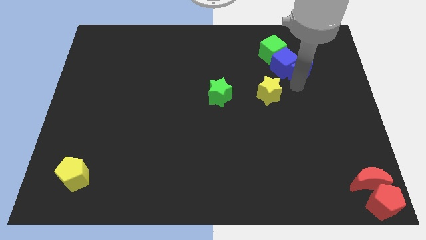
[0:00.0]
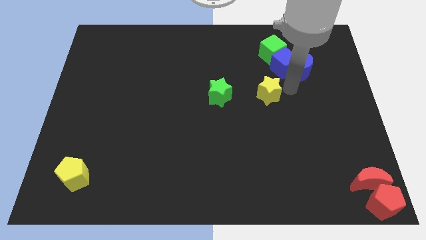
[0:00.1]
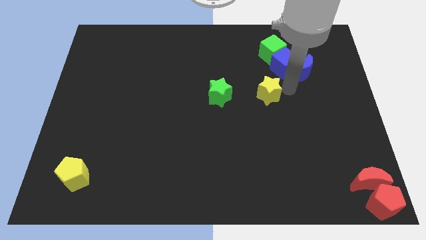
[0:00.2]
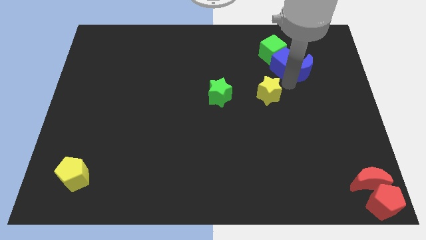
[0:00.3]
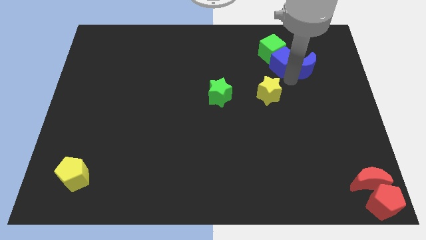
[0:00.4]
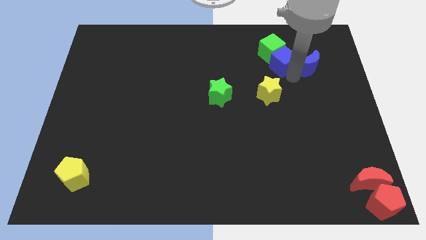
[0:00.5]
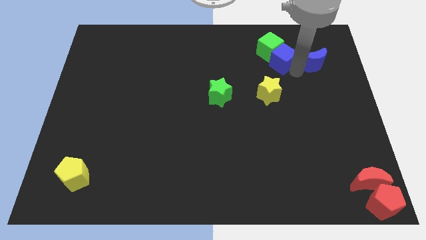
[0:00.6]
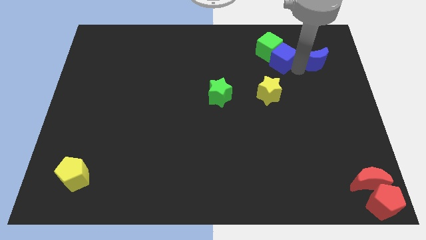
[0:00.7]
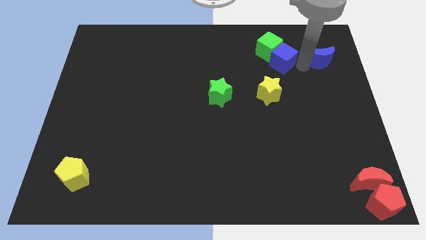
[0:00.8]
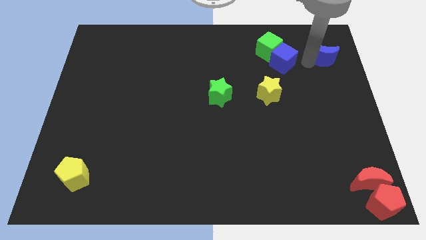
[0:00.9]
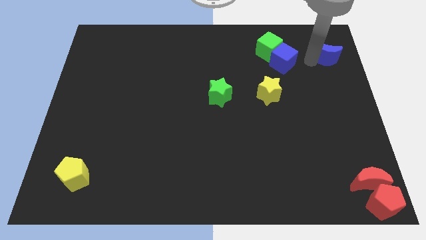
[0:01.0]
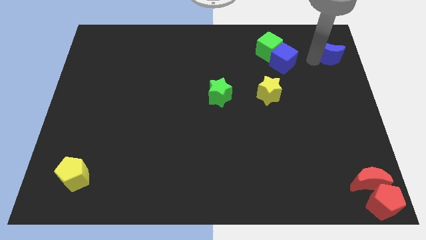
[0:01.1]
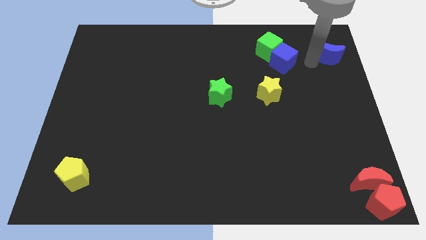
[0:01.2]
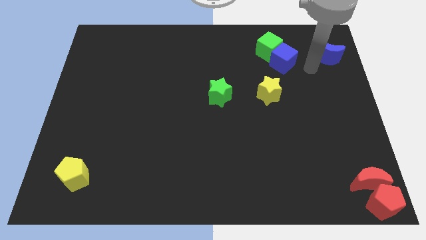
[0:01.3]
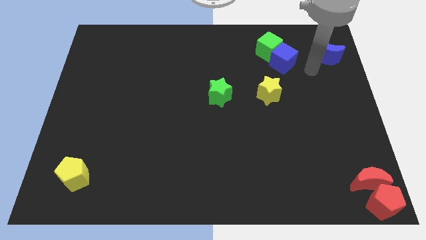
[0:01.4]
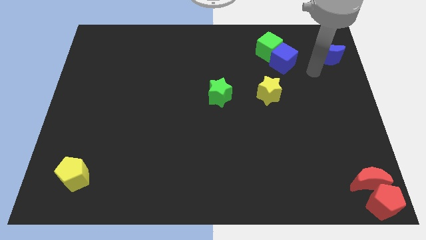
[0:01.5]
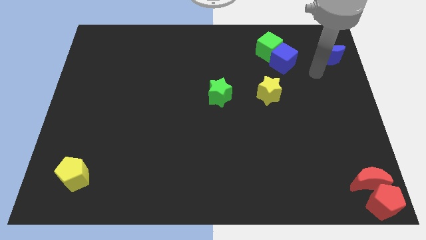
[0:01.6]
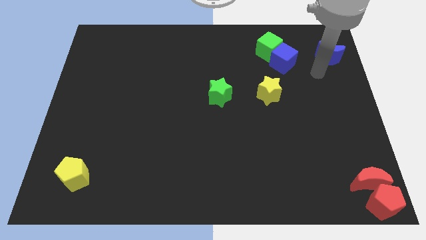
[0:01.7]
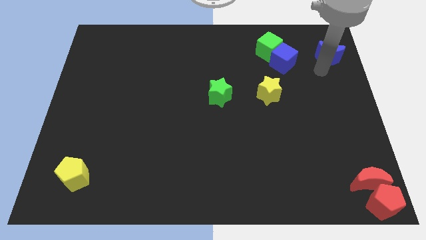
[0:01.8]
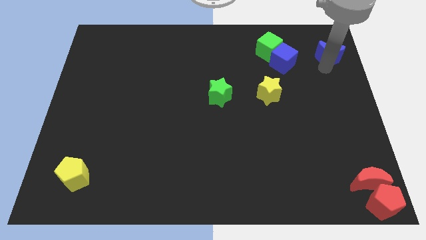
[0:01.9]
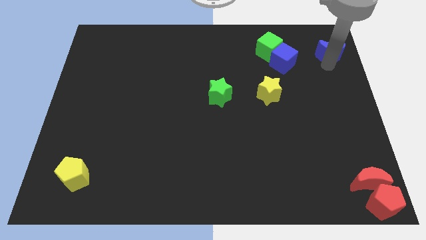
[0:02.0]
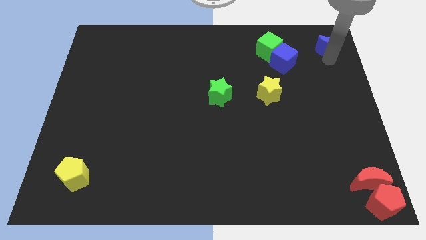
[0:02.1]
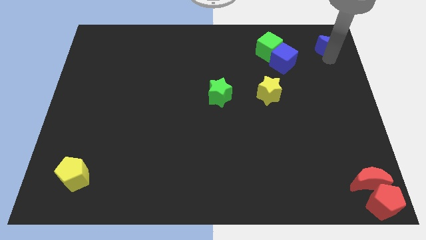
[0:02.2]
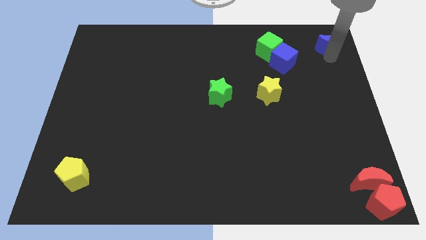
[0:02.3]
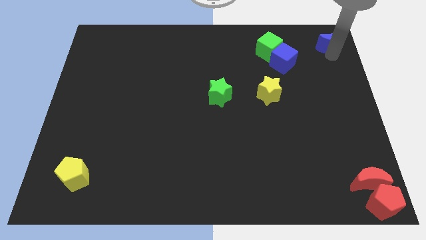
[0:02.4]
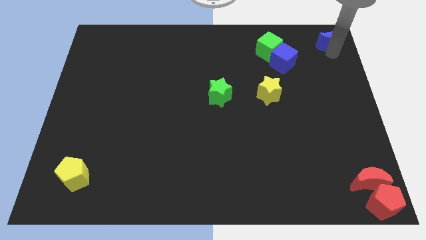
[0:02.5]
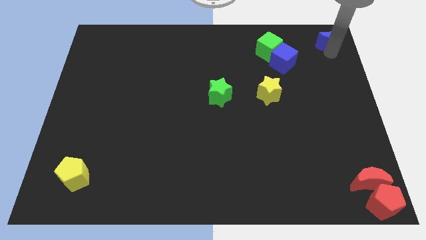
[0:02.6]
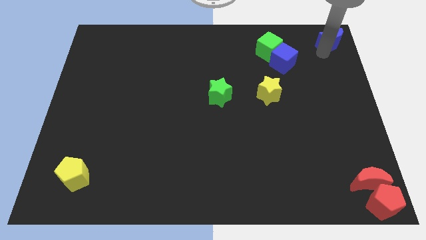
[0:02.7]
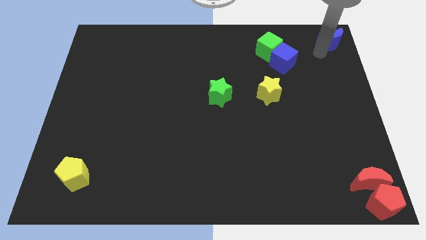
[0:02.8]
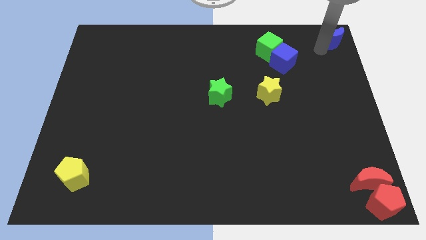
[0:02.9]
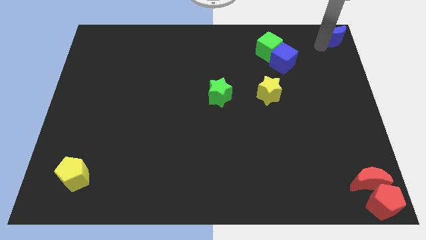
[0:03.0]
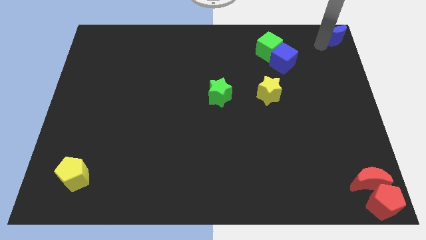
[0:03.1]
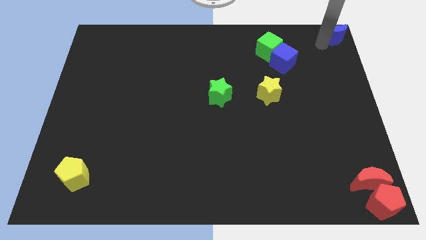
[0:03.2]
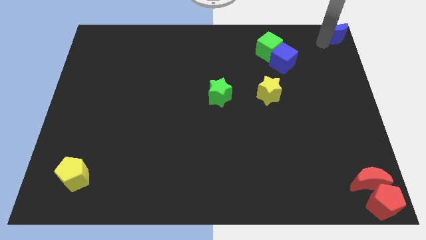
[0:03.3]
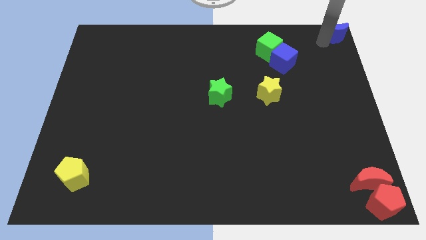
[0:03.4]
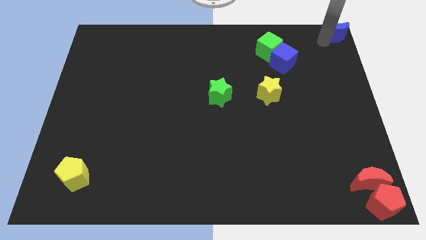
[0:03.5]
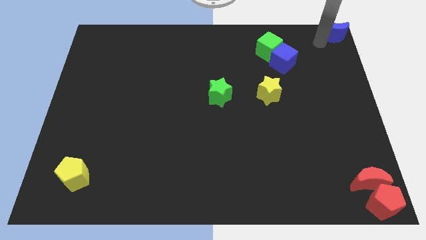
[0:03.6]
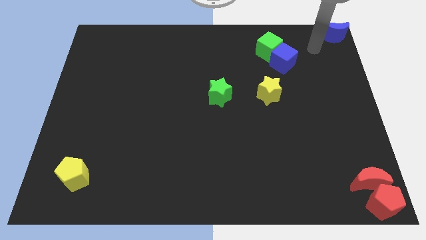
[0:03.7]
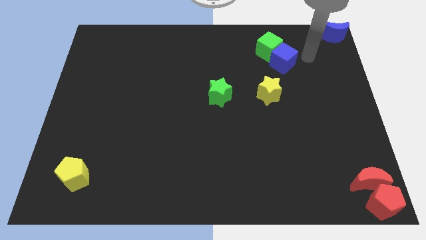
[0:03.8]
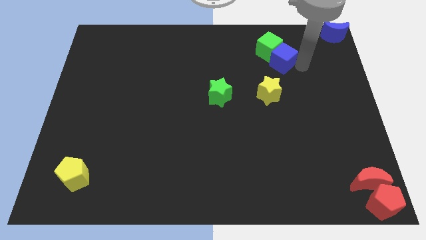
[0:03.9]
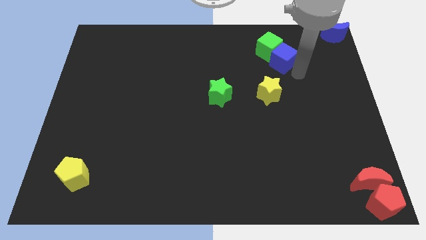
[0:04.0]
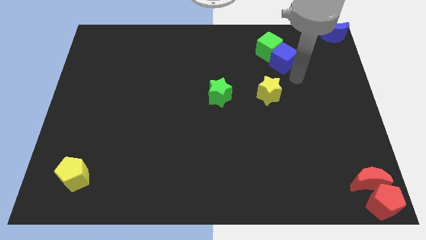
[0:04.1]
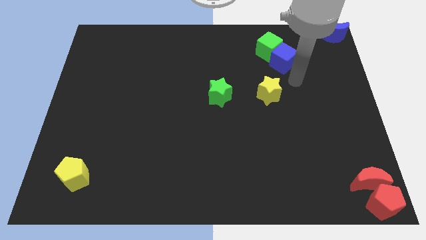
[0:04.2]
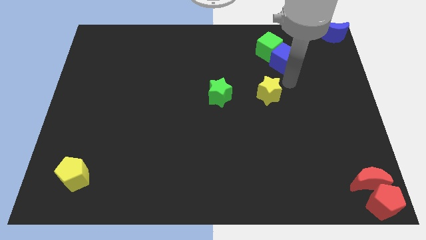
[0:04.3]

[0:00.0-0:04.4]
move the blue crescent to the top right corner of the board

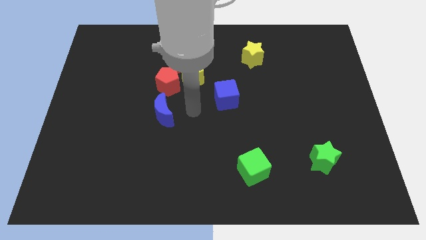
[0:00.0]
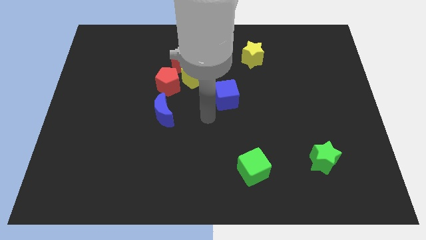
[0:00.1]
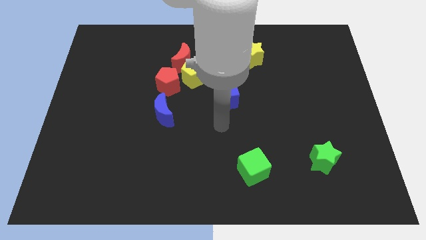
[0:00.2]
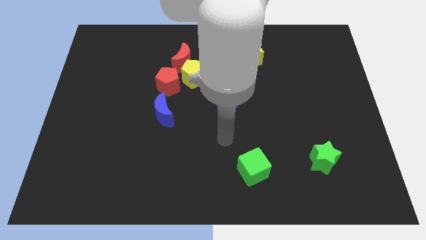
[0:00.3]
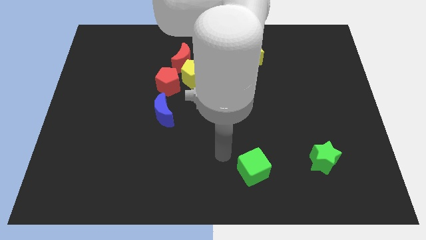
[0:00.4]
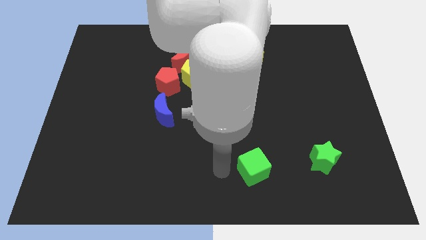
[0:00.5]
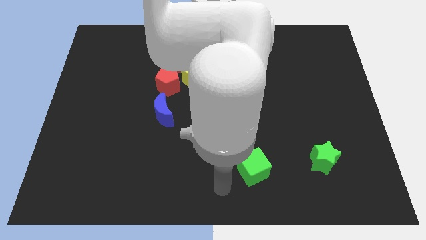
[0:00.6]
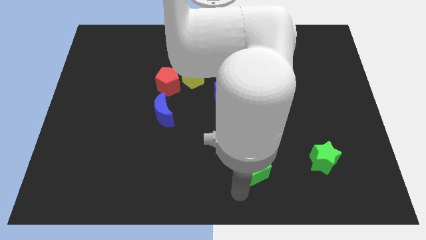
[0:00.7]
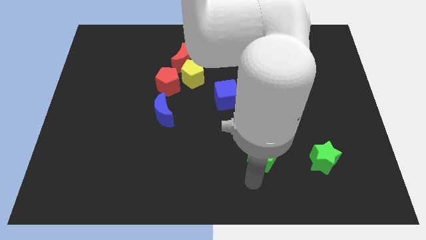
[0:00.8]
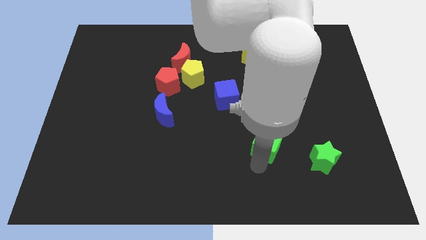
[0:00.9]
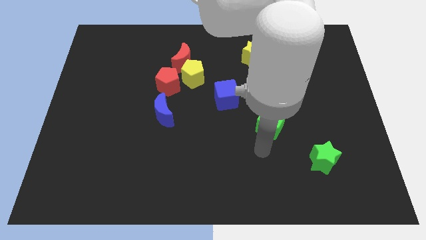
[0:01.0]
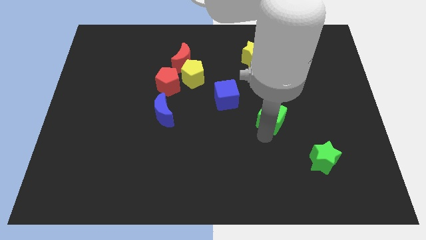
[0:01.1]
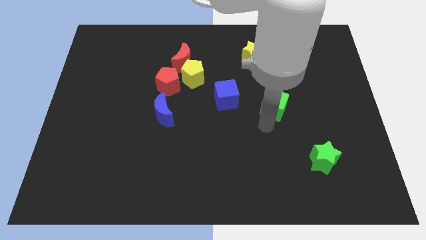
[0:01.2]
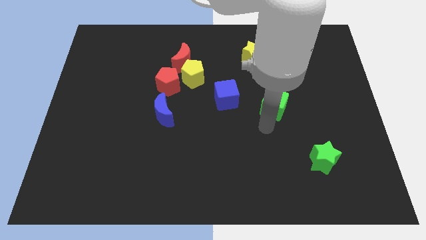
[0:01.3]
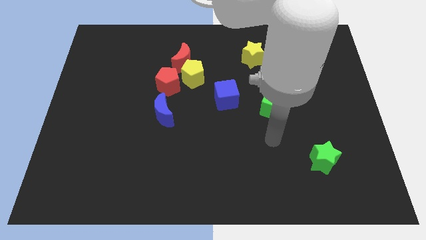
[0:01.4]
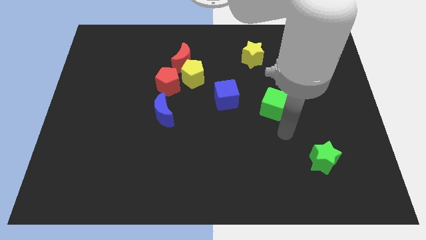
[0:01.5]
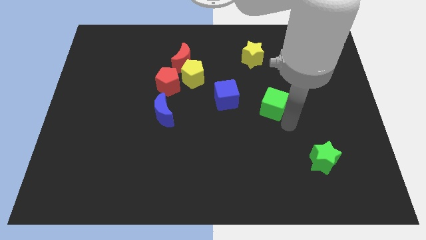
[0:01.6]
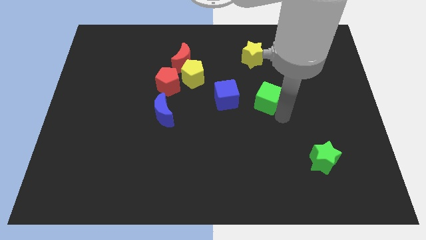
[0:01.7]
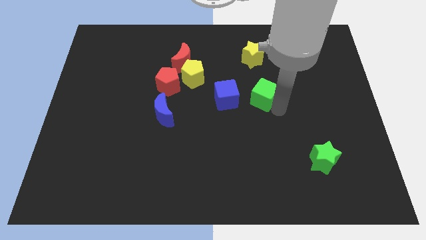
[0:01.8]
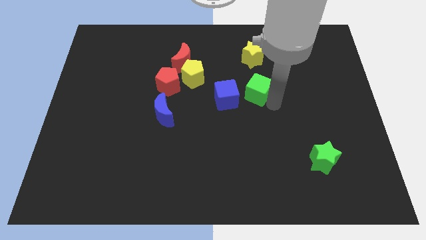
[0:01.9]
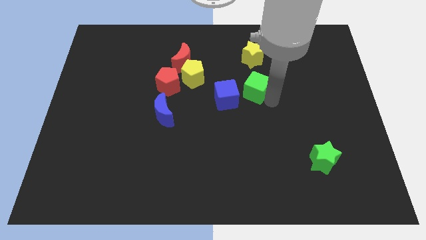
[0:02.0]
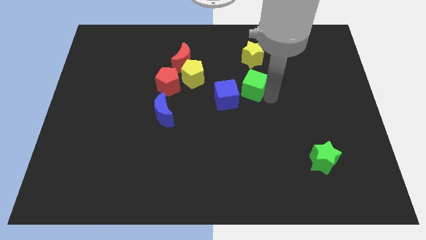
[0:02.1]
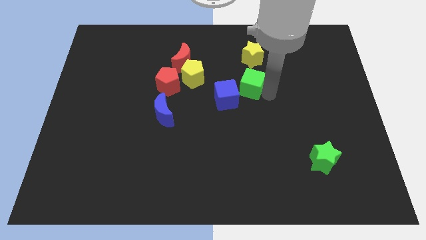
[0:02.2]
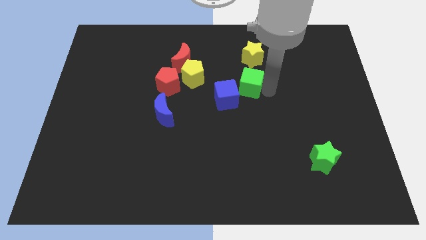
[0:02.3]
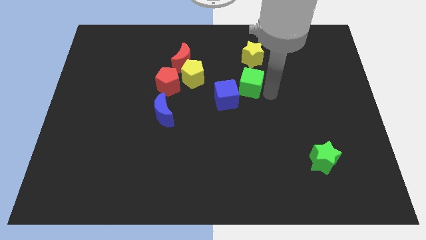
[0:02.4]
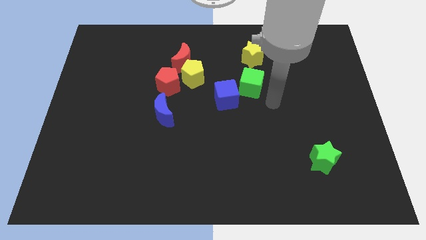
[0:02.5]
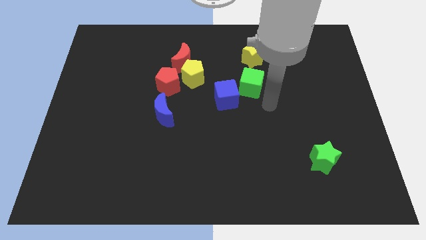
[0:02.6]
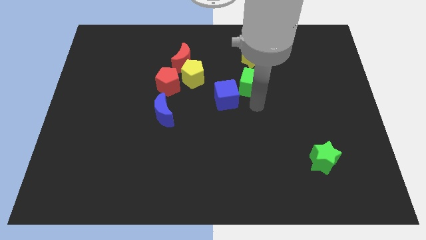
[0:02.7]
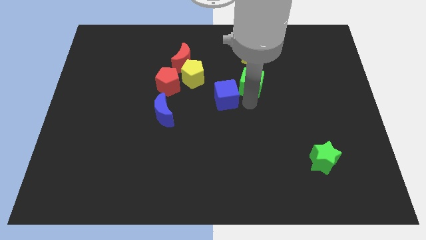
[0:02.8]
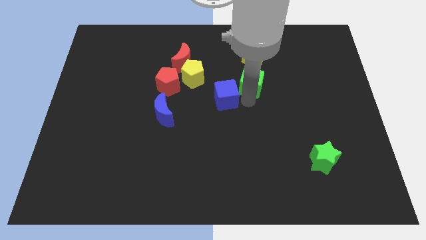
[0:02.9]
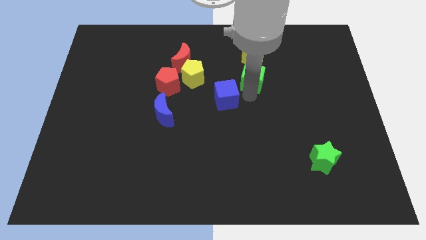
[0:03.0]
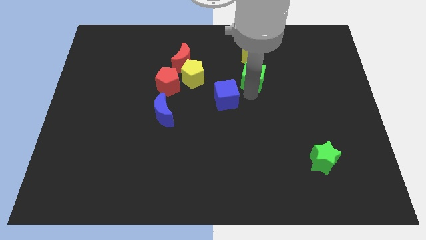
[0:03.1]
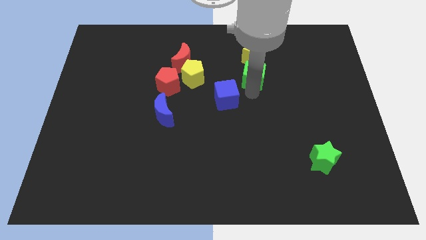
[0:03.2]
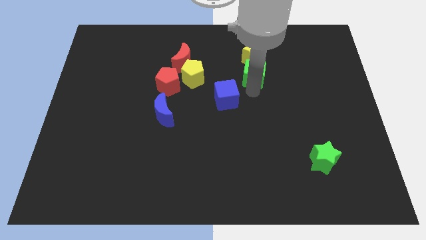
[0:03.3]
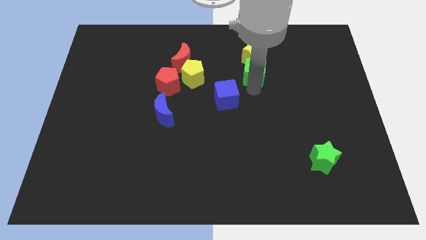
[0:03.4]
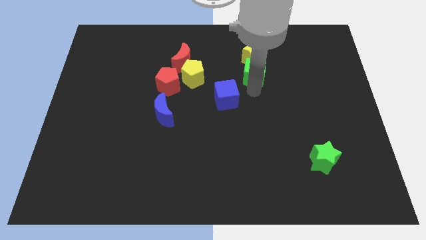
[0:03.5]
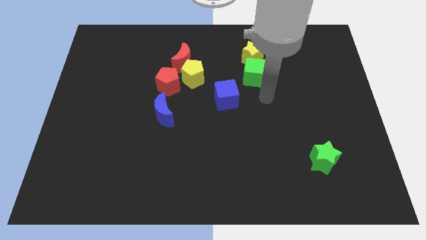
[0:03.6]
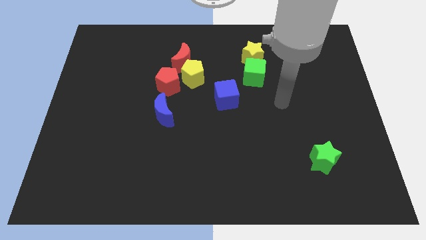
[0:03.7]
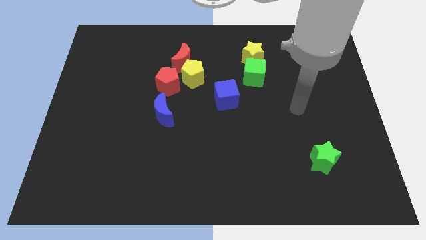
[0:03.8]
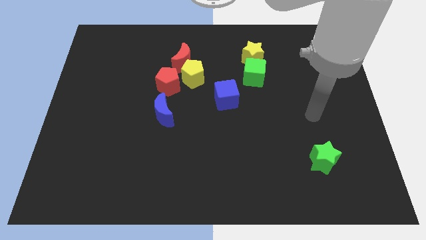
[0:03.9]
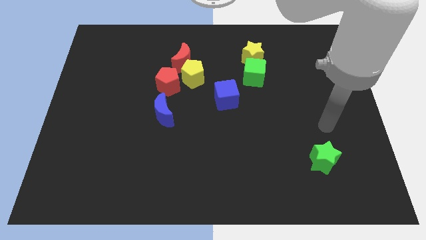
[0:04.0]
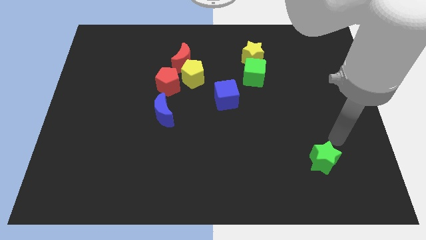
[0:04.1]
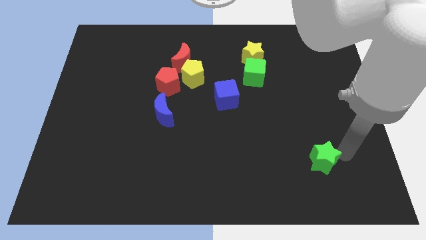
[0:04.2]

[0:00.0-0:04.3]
move the green cube below the yellow star

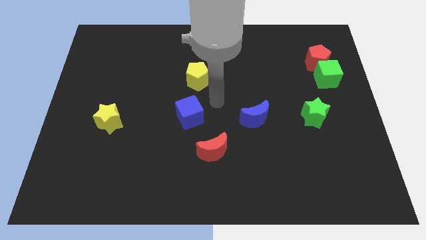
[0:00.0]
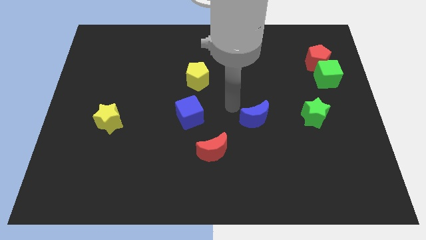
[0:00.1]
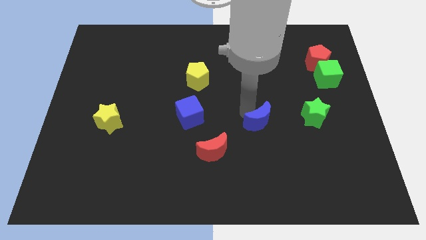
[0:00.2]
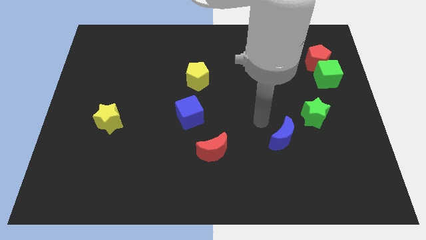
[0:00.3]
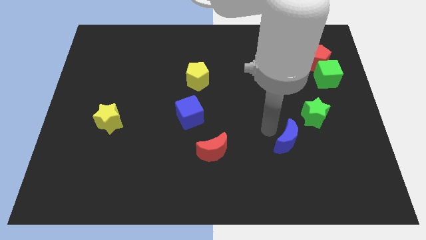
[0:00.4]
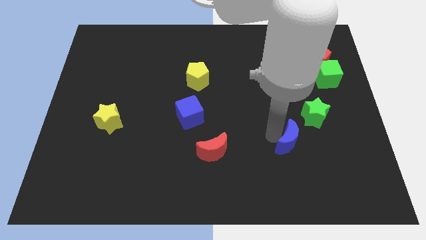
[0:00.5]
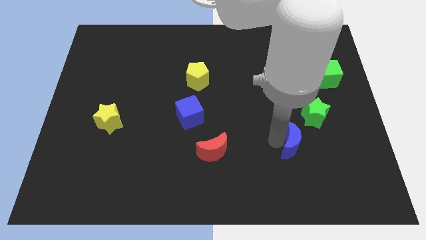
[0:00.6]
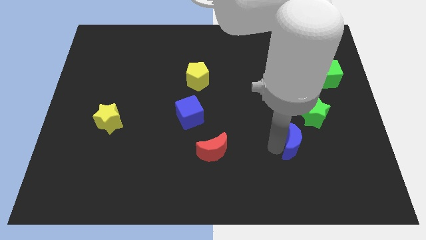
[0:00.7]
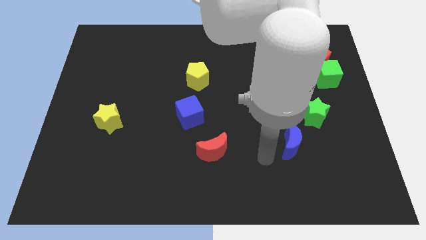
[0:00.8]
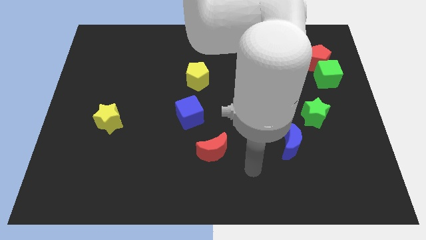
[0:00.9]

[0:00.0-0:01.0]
move the blue crescent to the bottom of the board
